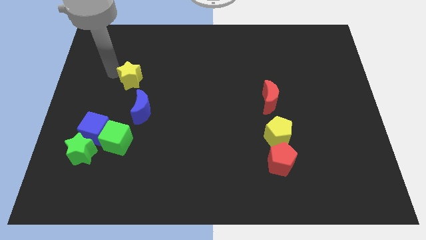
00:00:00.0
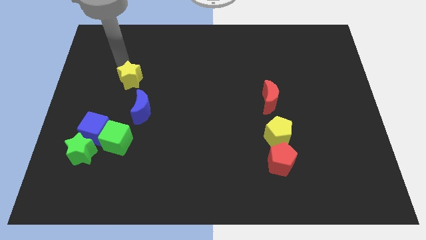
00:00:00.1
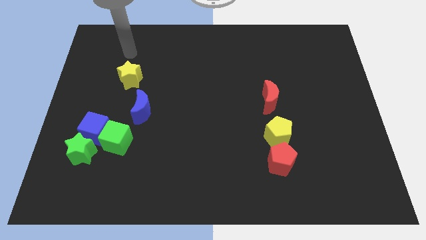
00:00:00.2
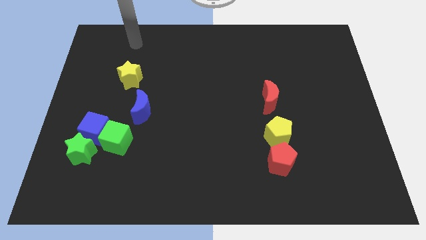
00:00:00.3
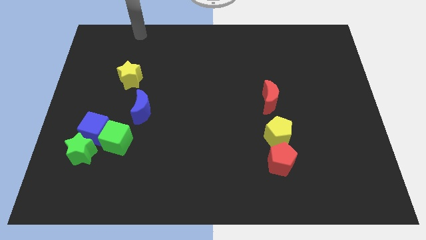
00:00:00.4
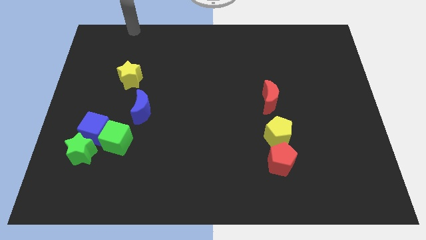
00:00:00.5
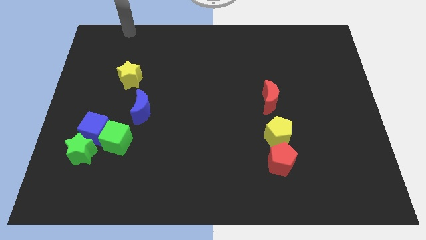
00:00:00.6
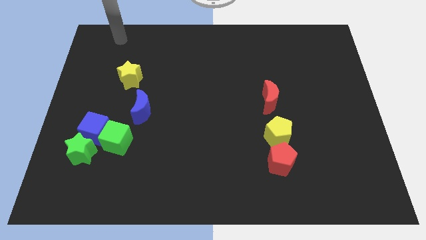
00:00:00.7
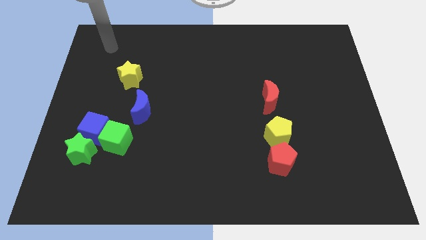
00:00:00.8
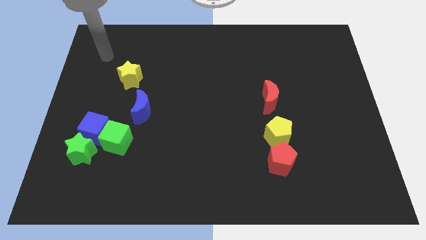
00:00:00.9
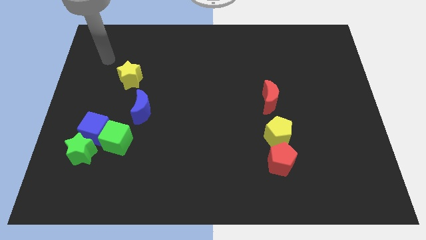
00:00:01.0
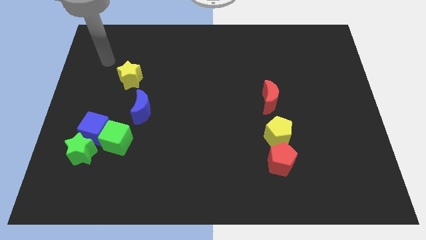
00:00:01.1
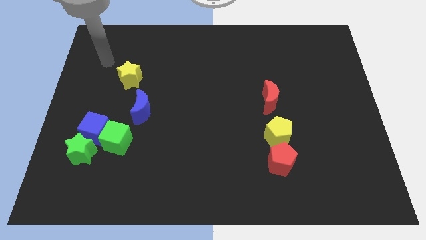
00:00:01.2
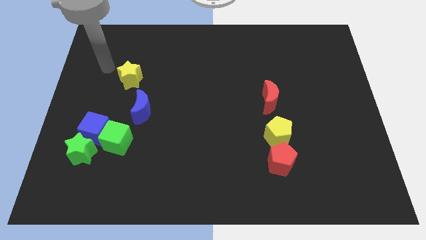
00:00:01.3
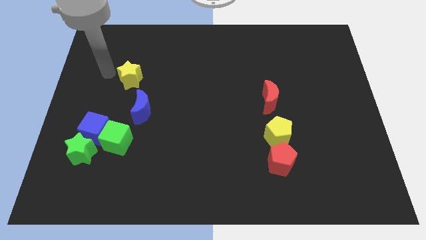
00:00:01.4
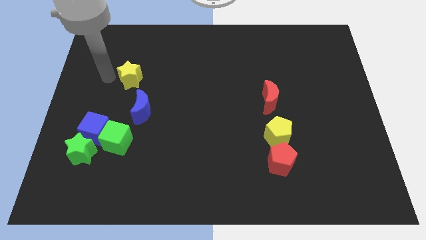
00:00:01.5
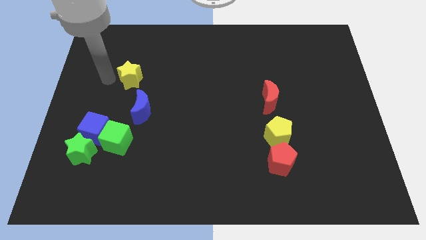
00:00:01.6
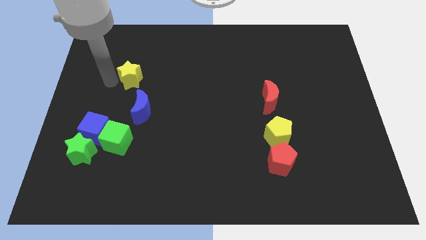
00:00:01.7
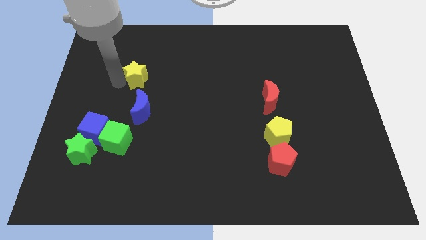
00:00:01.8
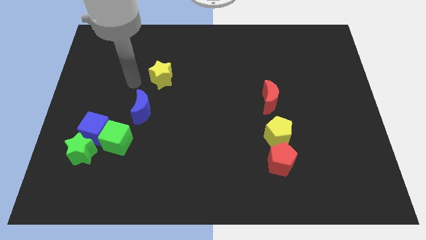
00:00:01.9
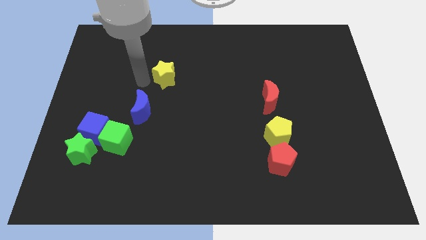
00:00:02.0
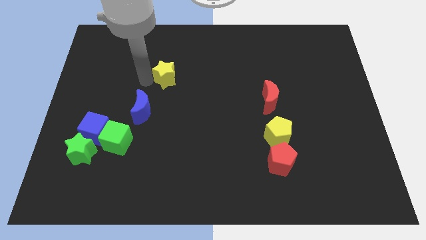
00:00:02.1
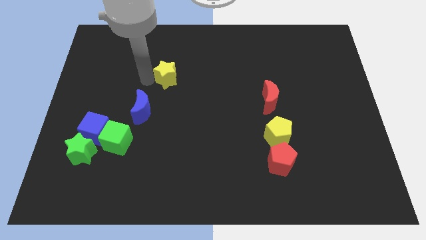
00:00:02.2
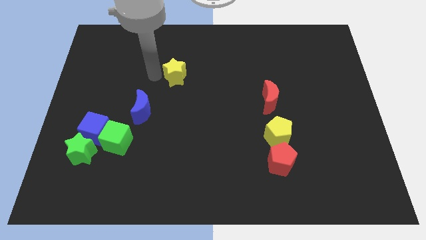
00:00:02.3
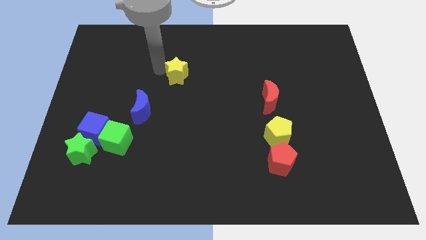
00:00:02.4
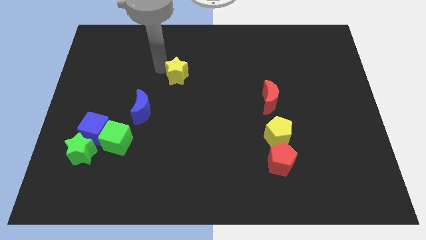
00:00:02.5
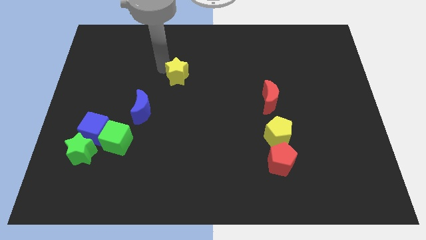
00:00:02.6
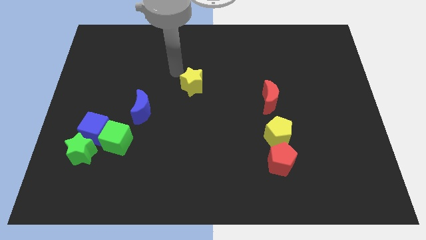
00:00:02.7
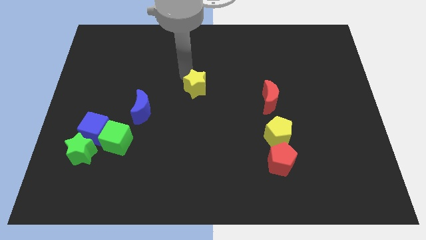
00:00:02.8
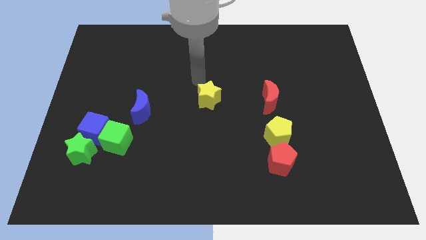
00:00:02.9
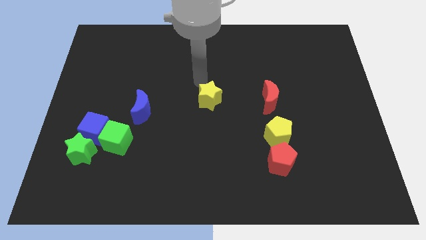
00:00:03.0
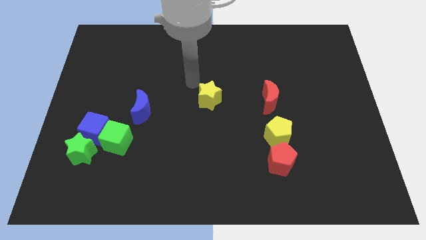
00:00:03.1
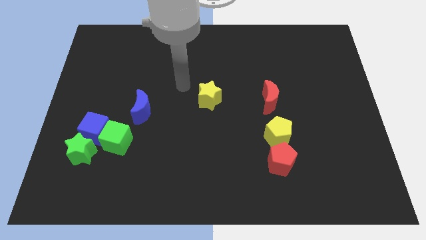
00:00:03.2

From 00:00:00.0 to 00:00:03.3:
push the yellow star to the center of the board

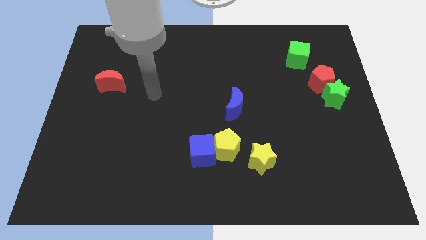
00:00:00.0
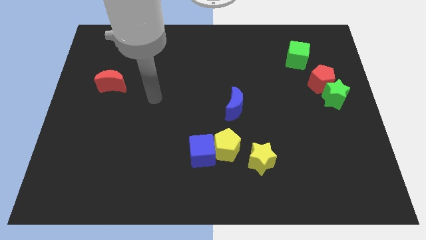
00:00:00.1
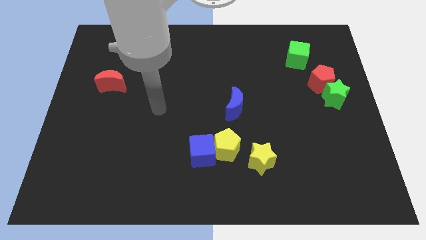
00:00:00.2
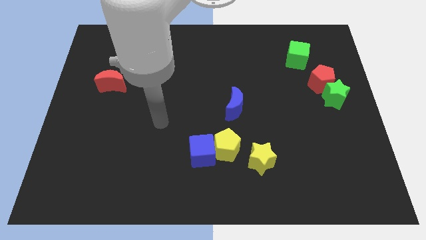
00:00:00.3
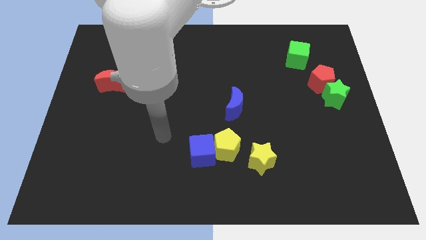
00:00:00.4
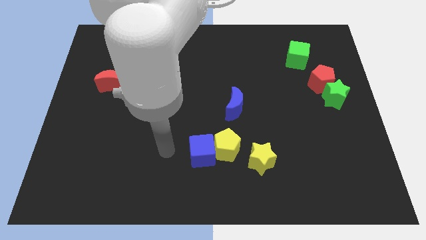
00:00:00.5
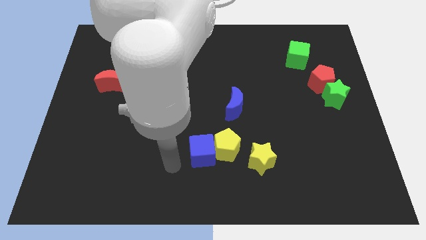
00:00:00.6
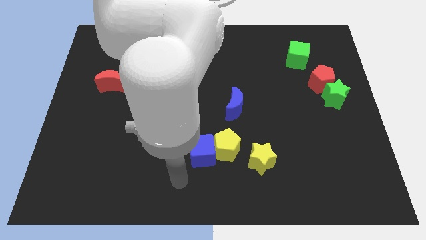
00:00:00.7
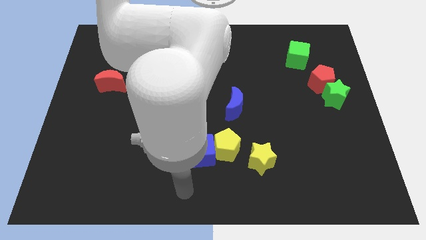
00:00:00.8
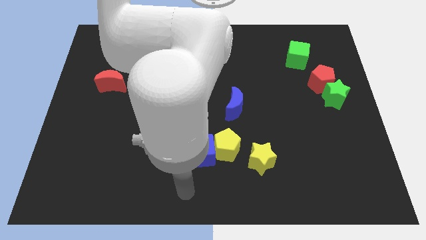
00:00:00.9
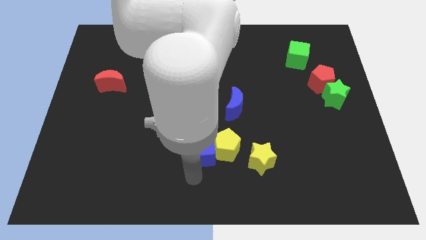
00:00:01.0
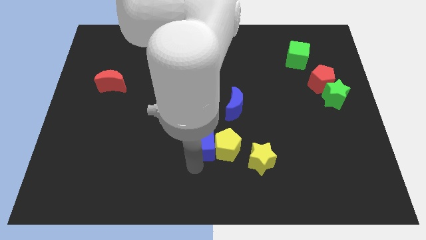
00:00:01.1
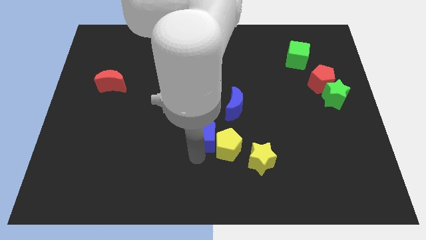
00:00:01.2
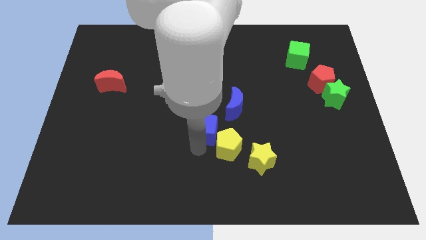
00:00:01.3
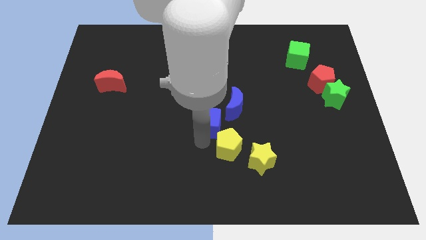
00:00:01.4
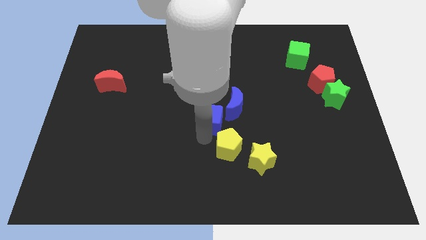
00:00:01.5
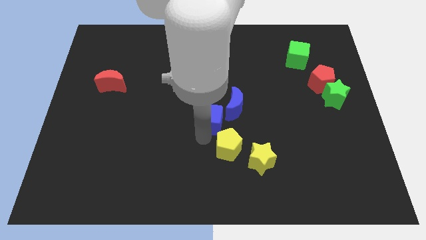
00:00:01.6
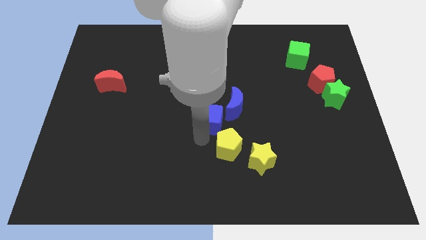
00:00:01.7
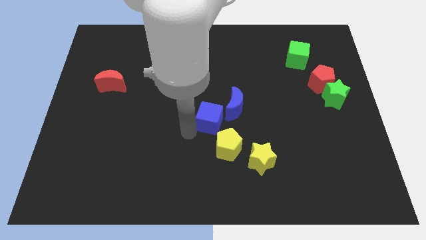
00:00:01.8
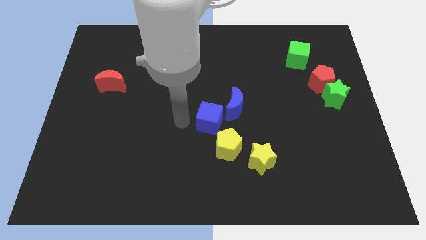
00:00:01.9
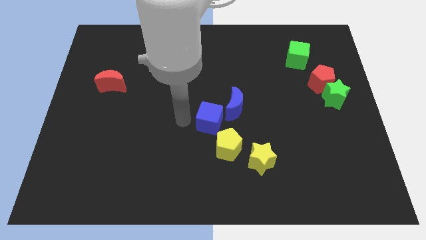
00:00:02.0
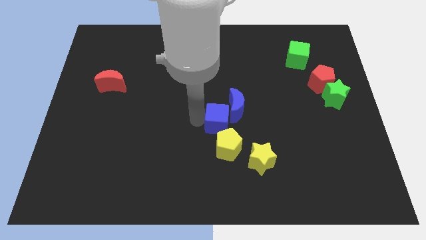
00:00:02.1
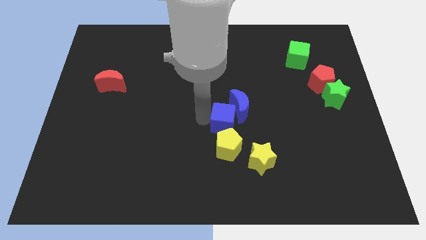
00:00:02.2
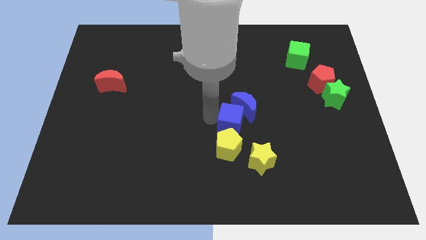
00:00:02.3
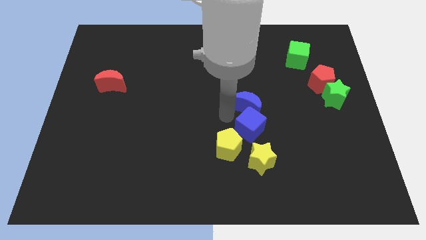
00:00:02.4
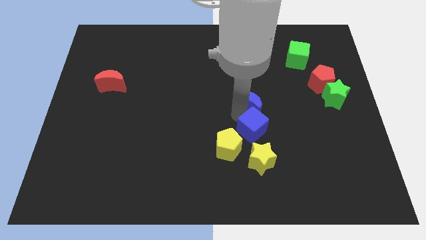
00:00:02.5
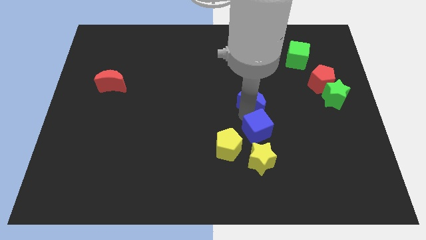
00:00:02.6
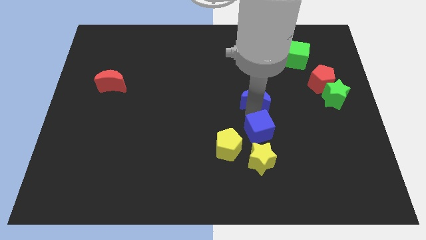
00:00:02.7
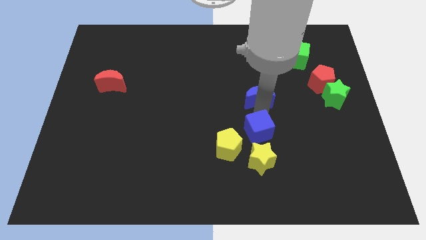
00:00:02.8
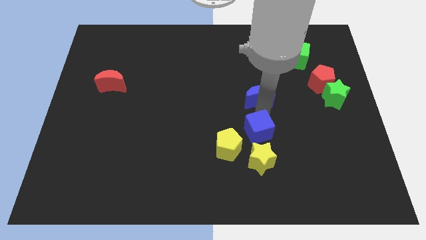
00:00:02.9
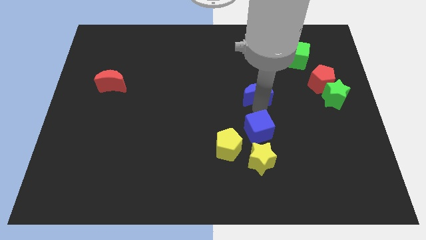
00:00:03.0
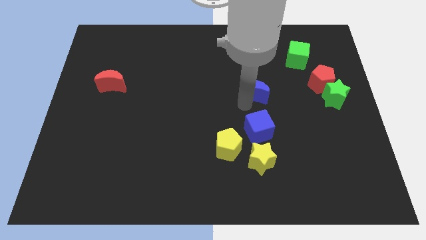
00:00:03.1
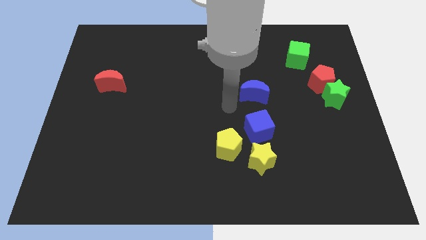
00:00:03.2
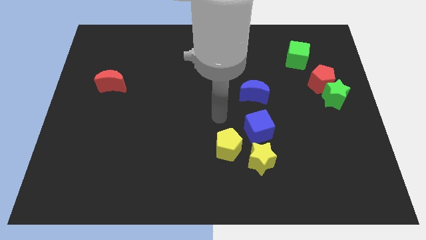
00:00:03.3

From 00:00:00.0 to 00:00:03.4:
place your arm in between the blue blocks

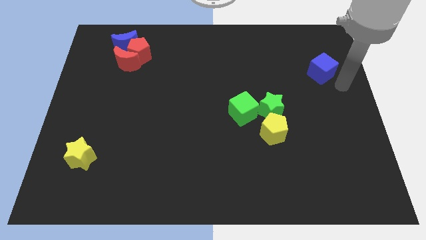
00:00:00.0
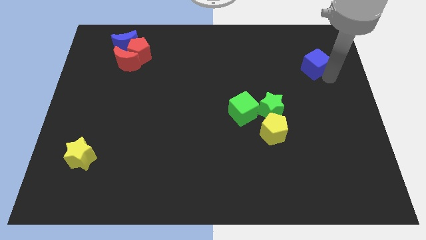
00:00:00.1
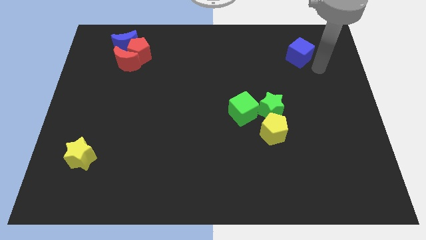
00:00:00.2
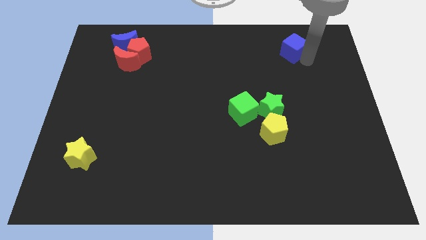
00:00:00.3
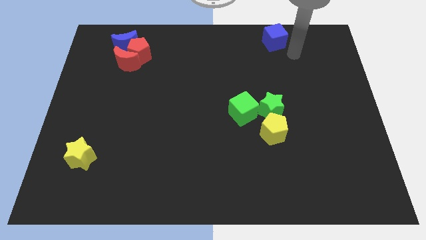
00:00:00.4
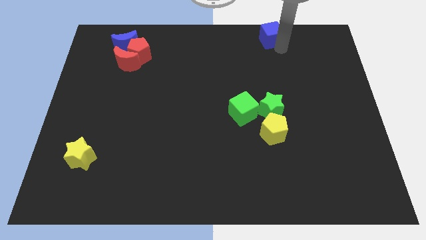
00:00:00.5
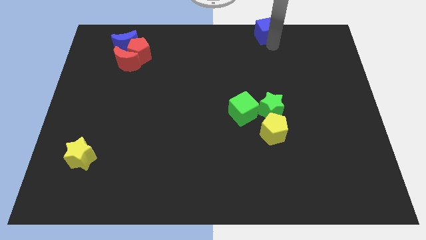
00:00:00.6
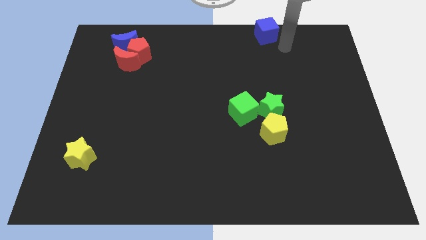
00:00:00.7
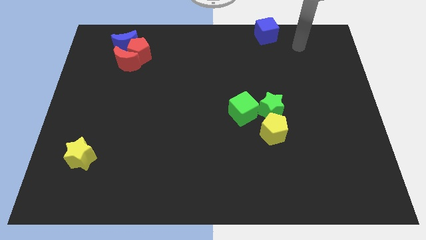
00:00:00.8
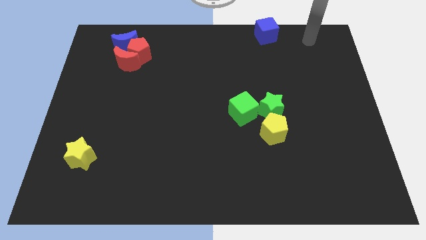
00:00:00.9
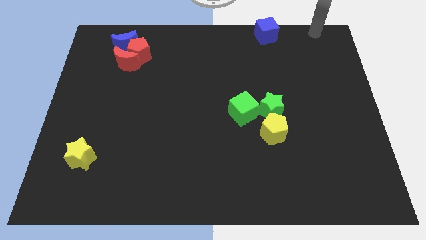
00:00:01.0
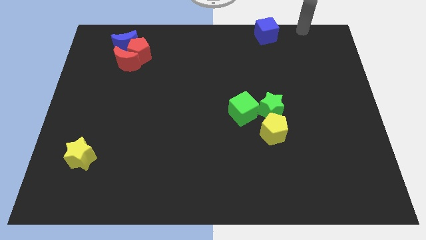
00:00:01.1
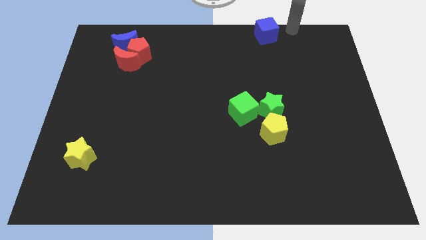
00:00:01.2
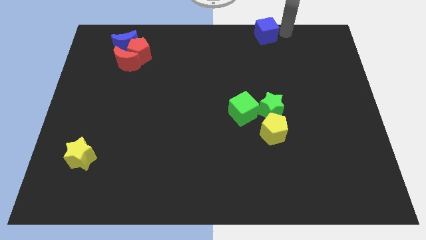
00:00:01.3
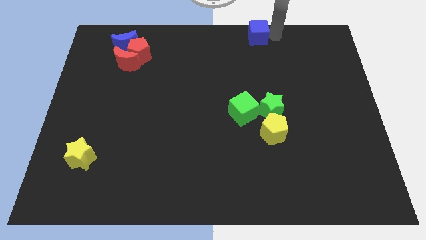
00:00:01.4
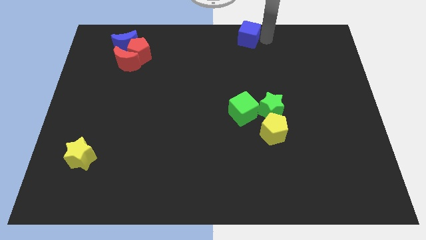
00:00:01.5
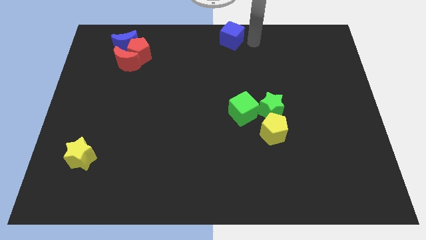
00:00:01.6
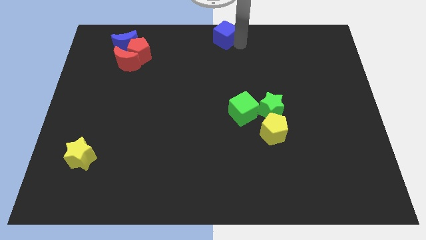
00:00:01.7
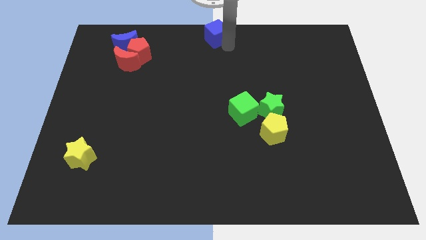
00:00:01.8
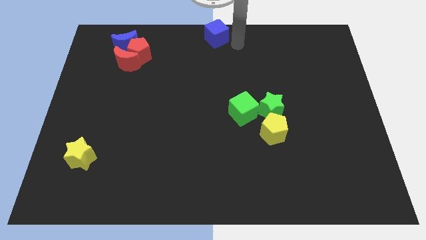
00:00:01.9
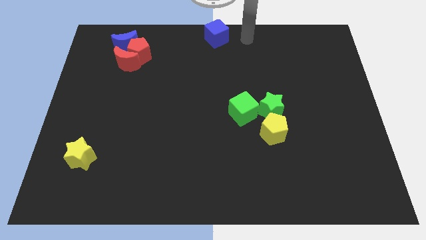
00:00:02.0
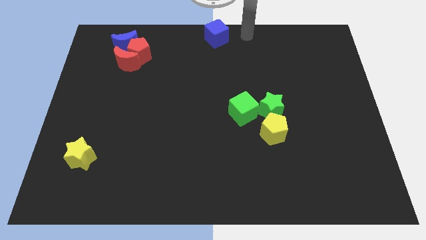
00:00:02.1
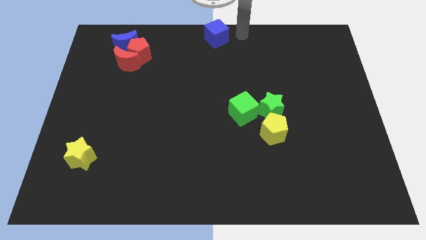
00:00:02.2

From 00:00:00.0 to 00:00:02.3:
move the blue cube to the top center of the board
